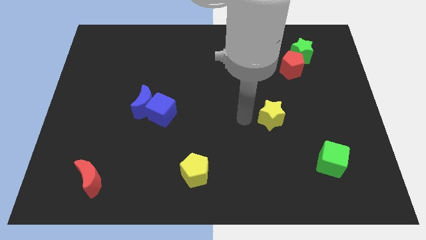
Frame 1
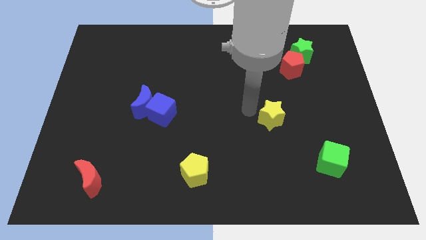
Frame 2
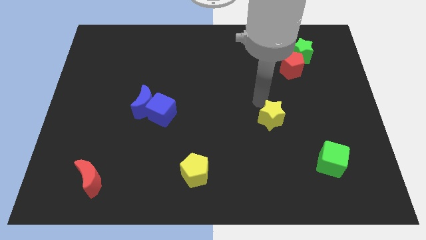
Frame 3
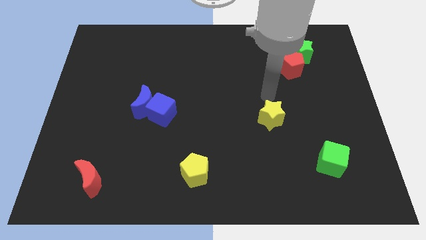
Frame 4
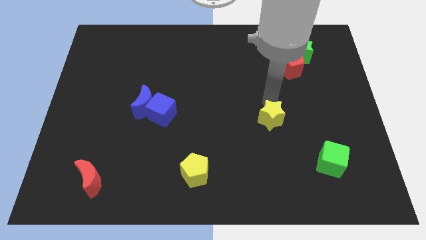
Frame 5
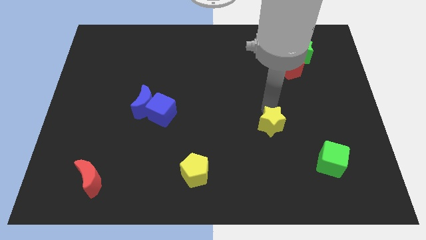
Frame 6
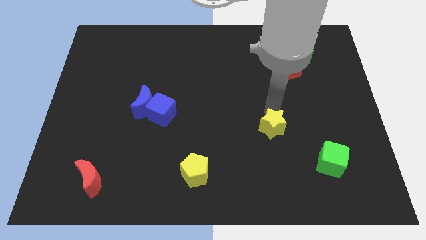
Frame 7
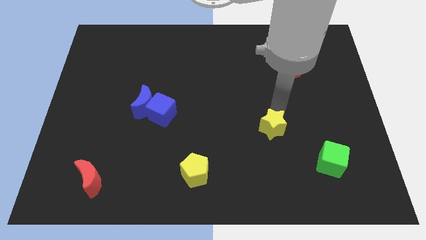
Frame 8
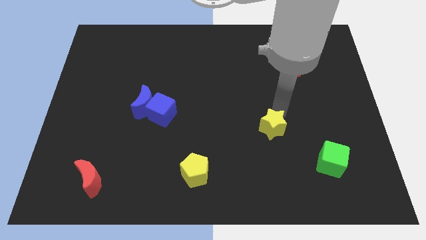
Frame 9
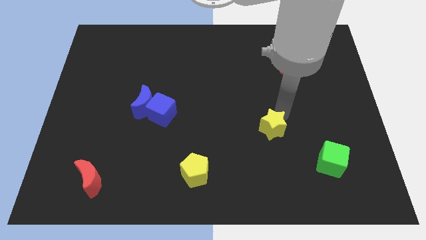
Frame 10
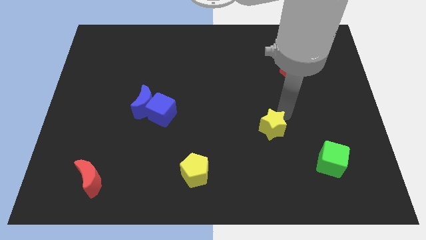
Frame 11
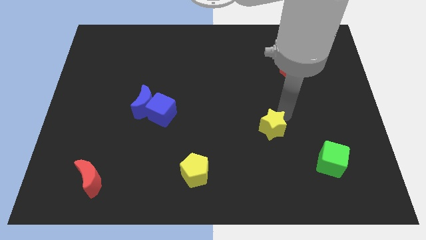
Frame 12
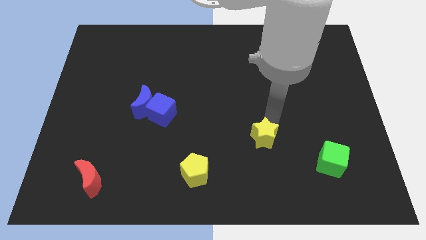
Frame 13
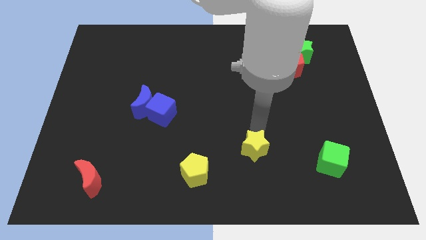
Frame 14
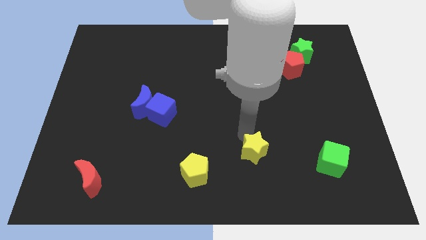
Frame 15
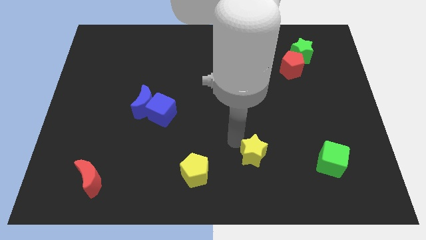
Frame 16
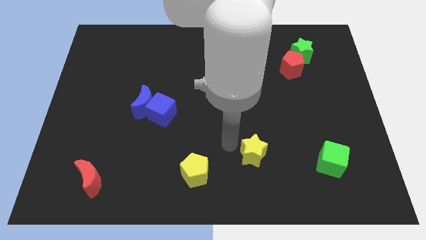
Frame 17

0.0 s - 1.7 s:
move the yellow star diagonally on the top right side of the yellow pentagon

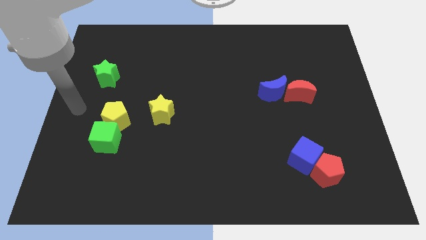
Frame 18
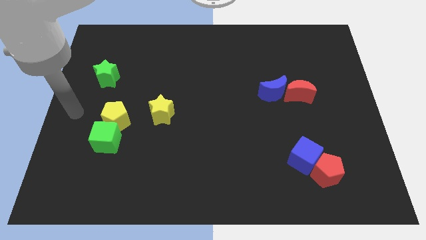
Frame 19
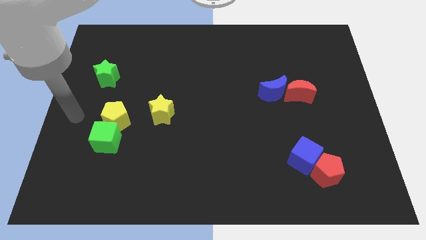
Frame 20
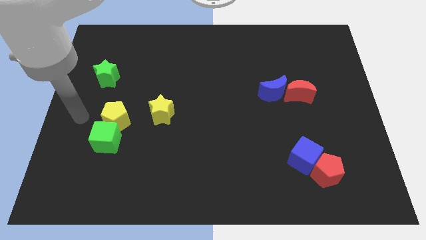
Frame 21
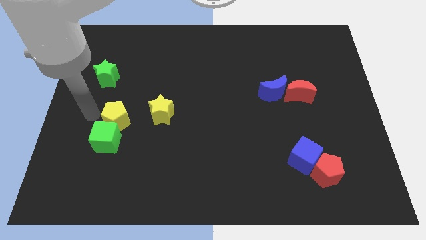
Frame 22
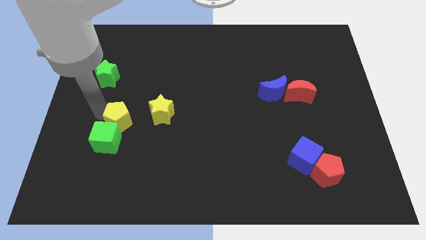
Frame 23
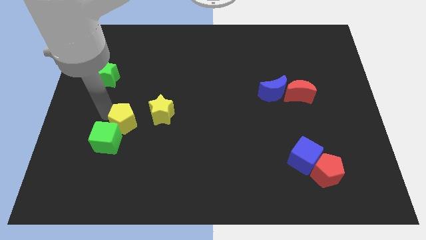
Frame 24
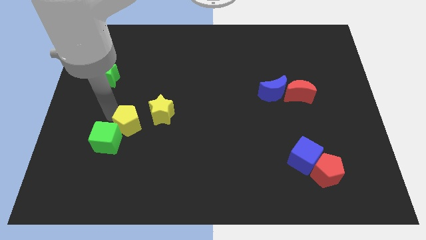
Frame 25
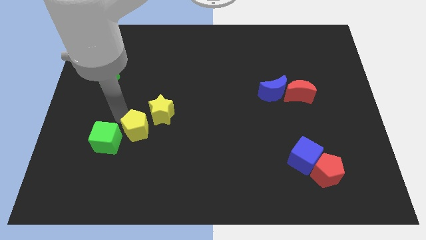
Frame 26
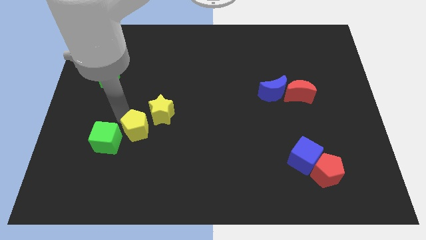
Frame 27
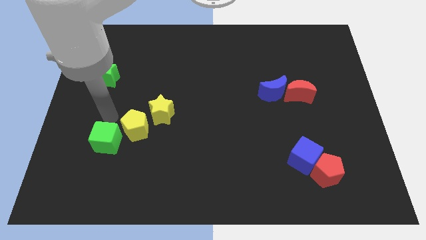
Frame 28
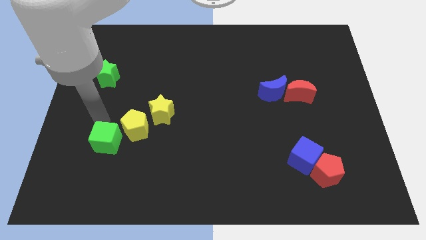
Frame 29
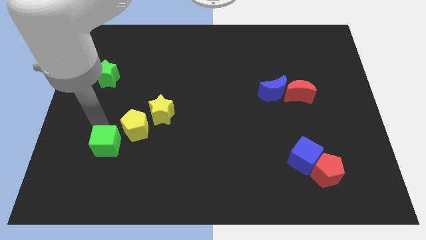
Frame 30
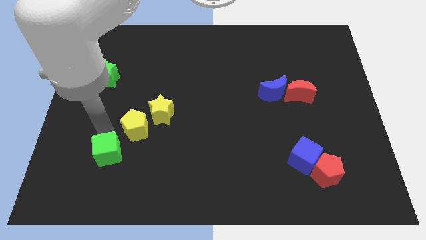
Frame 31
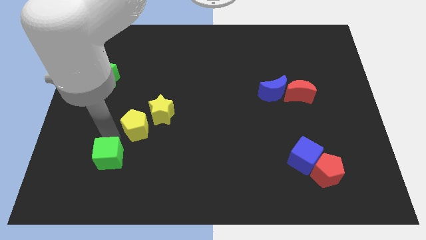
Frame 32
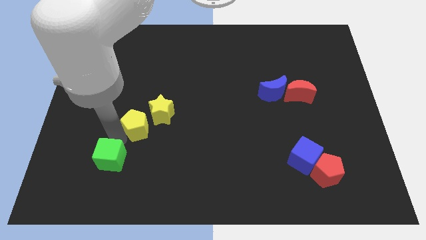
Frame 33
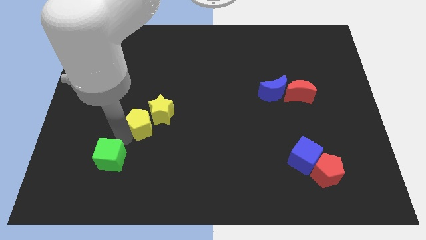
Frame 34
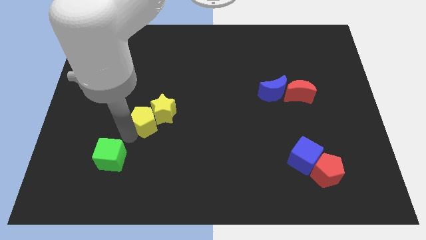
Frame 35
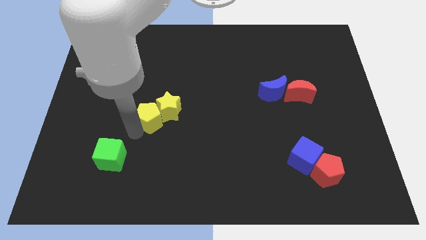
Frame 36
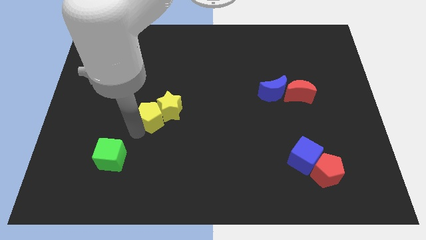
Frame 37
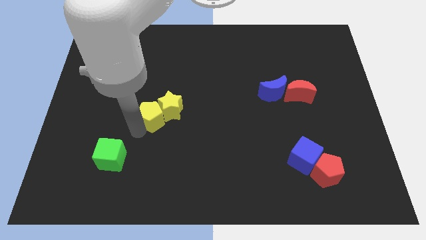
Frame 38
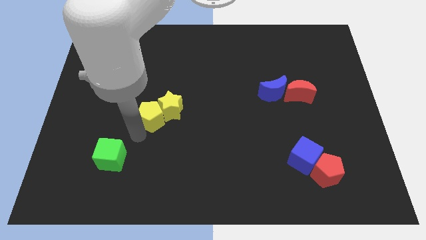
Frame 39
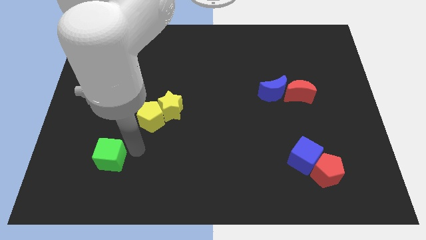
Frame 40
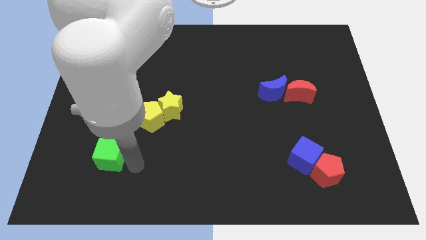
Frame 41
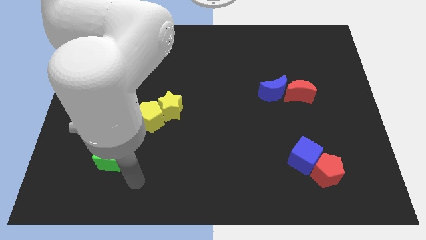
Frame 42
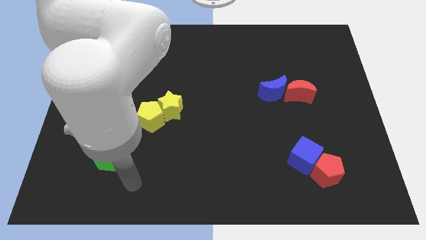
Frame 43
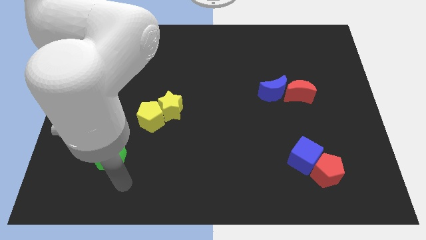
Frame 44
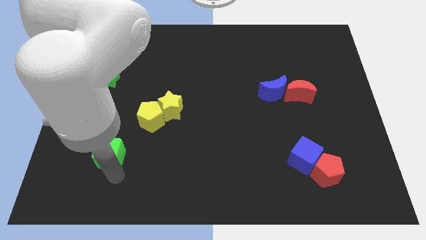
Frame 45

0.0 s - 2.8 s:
separate yellow pentagon from green cube

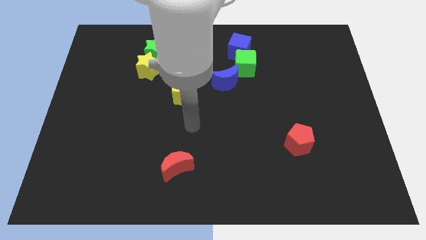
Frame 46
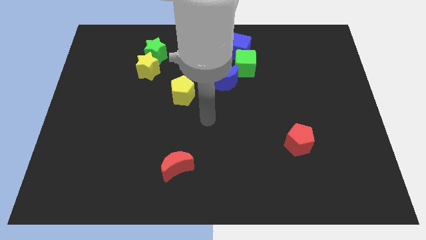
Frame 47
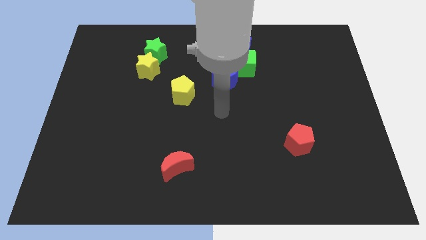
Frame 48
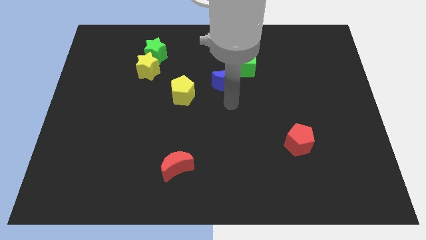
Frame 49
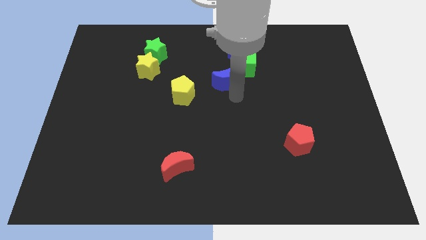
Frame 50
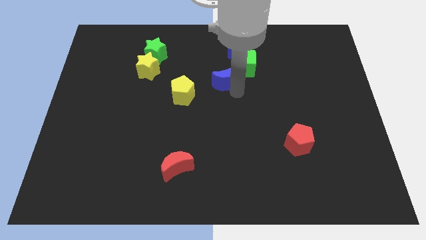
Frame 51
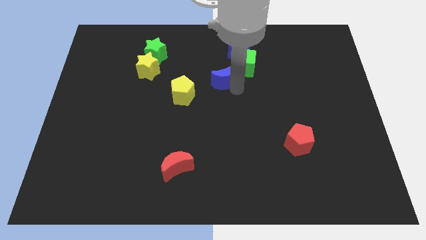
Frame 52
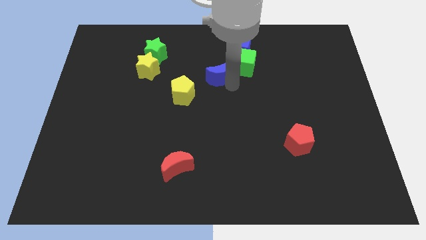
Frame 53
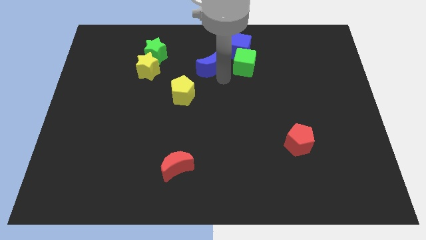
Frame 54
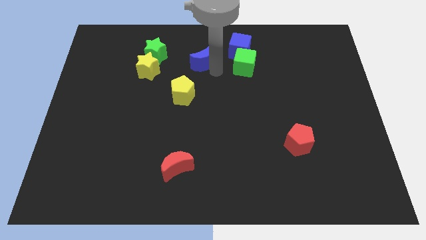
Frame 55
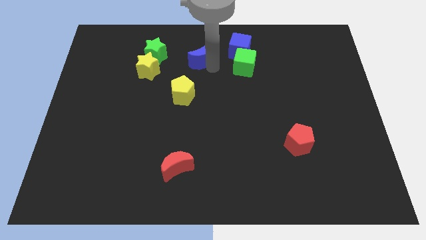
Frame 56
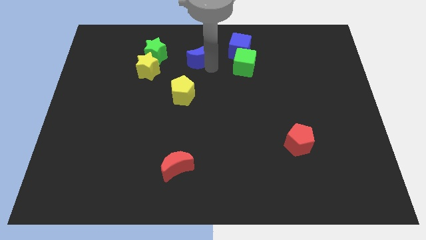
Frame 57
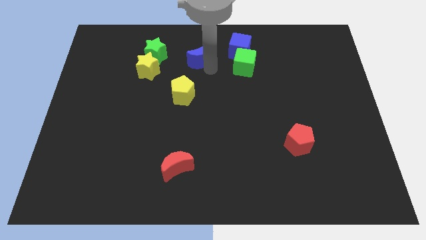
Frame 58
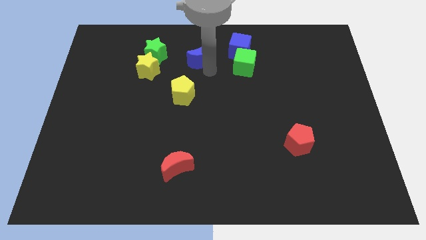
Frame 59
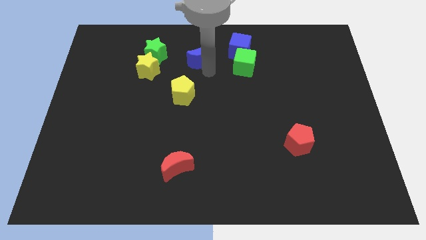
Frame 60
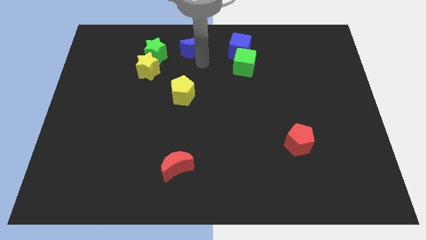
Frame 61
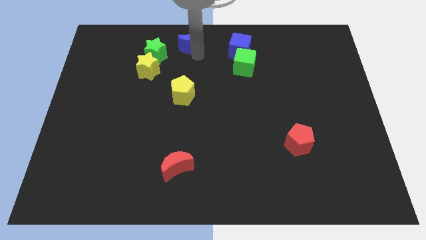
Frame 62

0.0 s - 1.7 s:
place the blue moon diagonal to the left of the blue cube

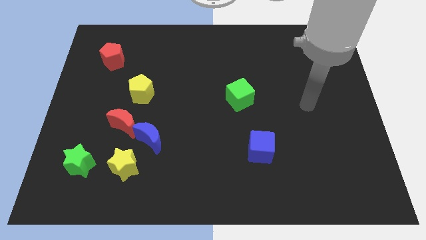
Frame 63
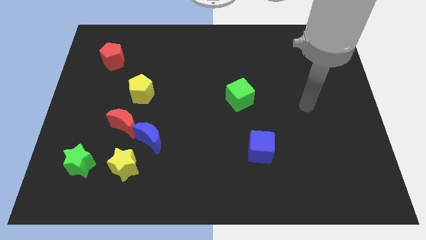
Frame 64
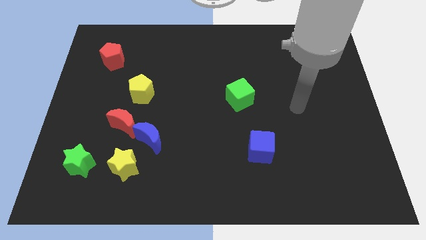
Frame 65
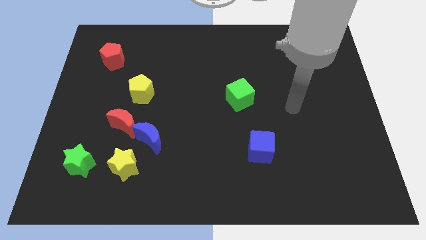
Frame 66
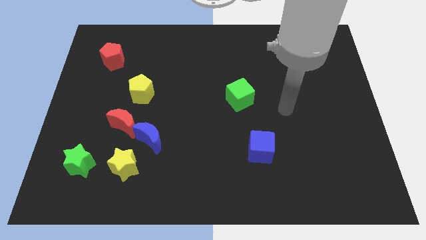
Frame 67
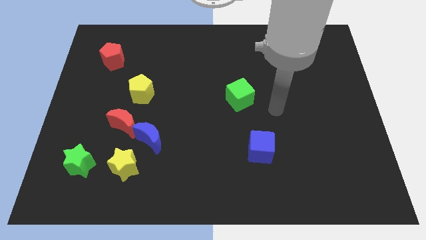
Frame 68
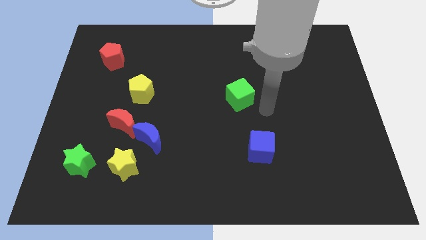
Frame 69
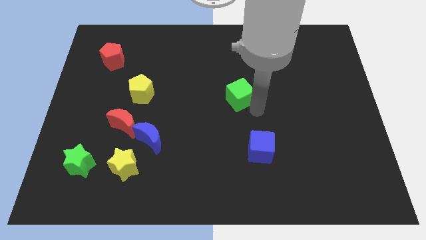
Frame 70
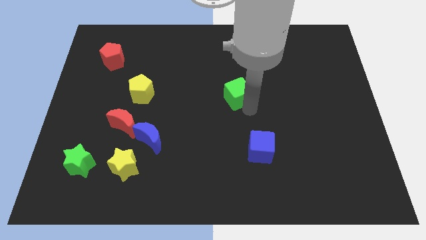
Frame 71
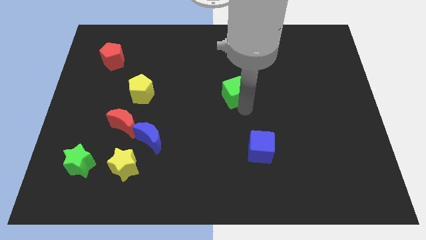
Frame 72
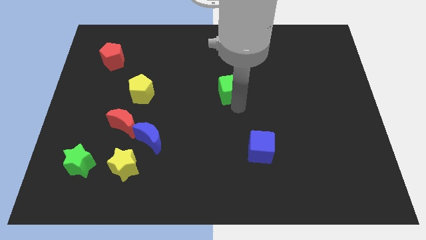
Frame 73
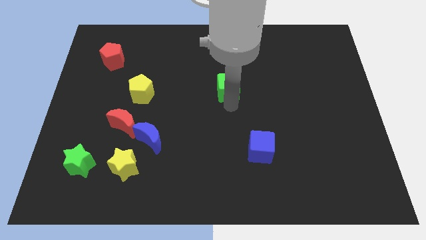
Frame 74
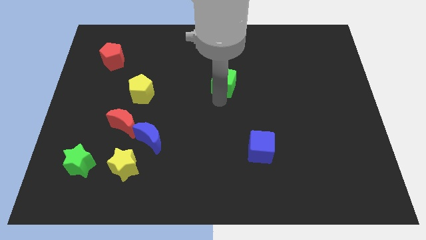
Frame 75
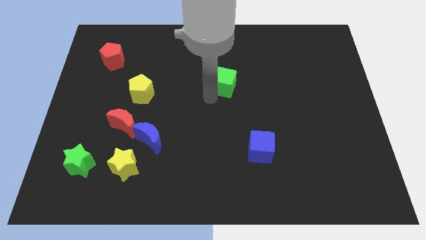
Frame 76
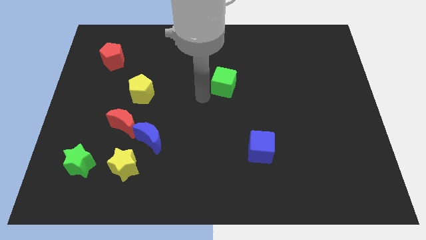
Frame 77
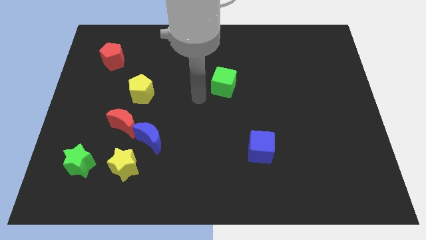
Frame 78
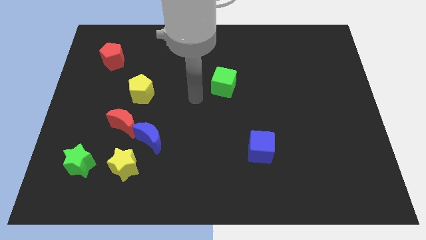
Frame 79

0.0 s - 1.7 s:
move the green cube slightly up

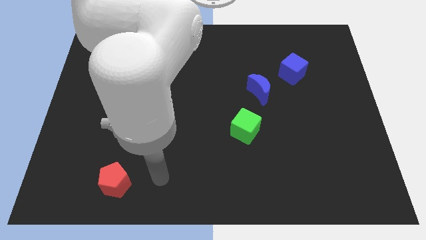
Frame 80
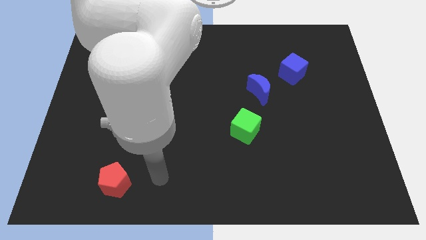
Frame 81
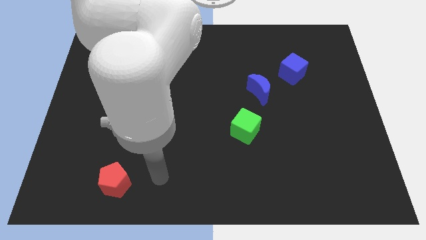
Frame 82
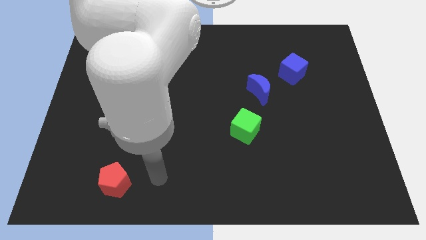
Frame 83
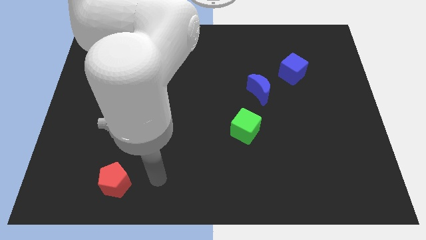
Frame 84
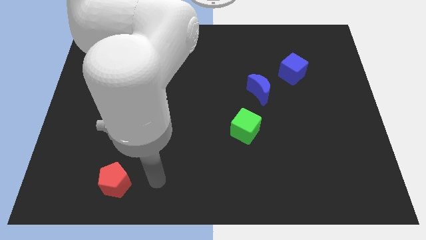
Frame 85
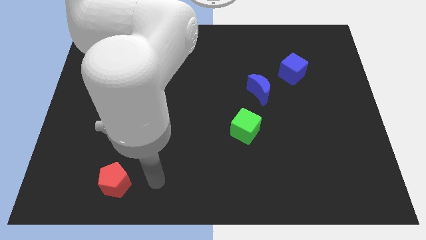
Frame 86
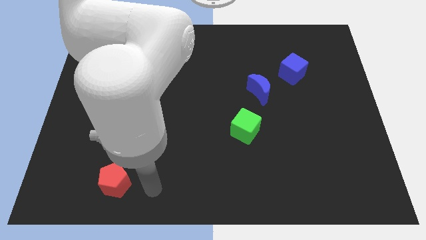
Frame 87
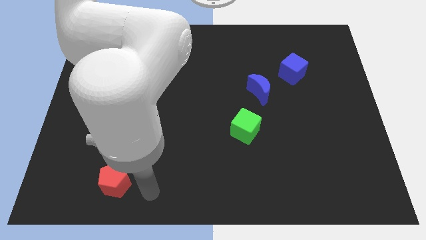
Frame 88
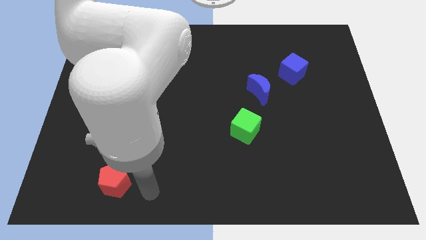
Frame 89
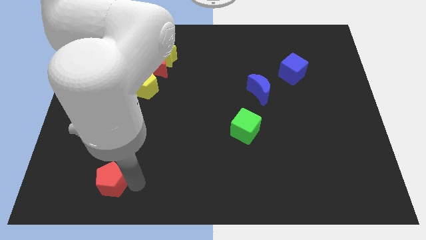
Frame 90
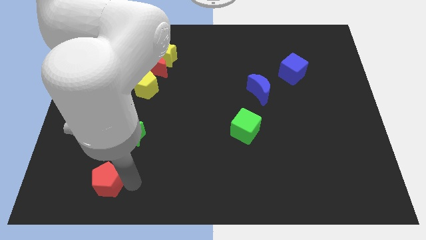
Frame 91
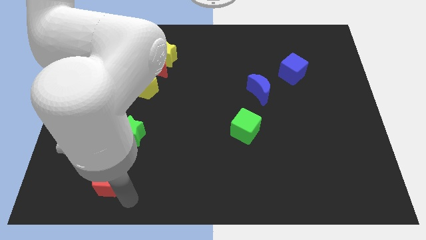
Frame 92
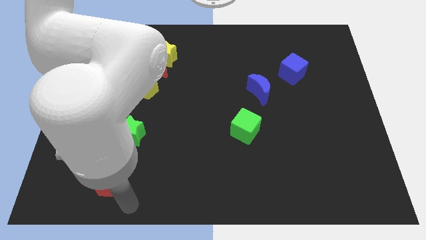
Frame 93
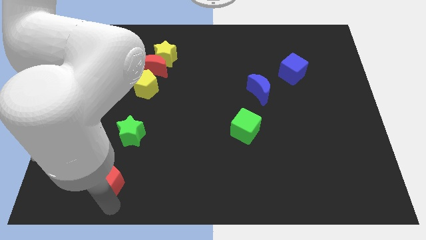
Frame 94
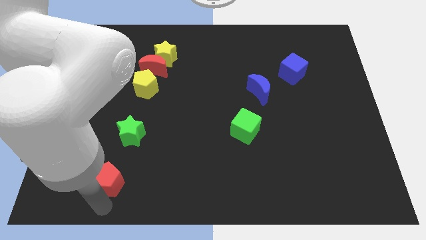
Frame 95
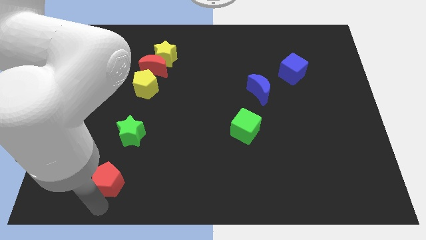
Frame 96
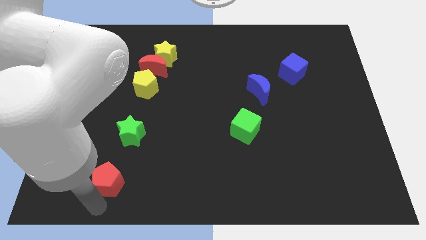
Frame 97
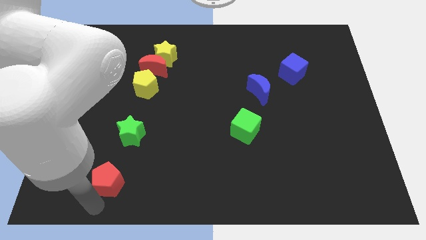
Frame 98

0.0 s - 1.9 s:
push the red pentagon diagonally on the bottom left side of the green star
